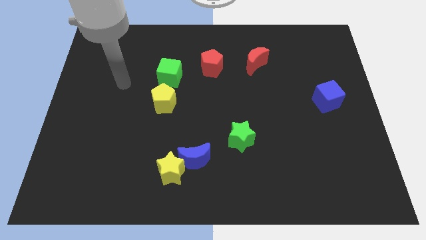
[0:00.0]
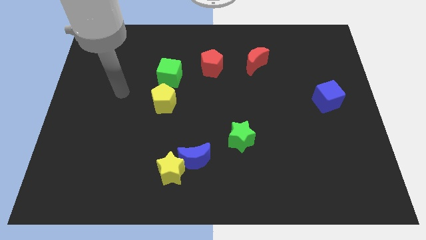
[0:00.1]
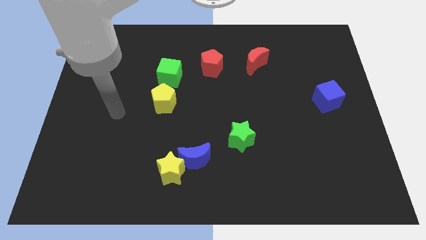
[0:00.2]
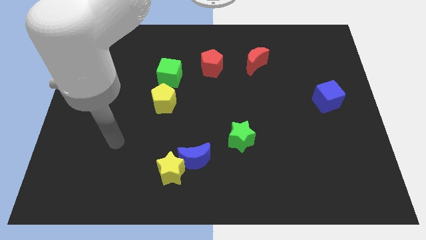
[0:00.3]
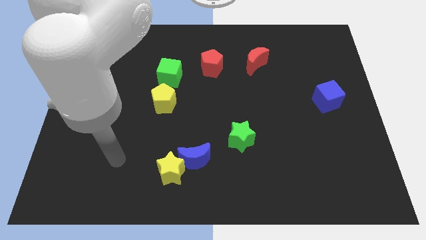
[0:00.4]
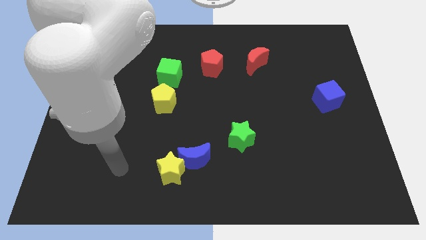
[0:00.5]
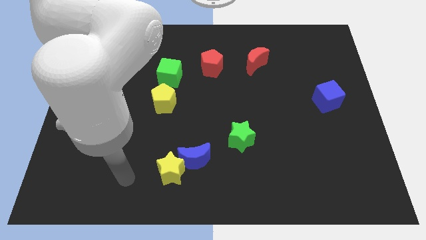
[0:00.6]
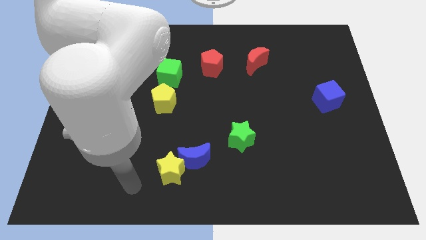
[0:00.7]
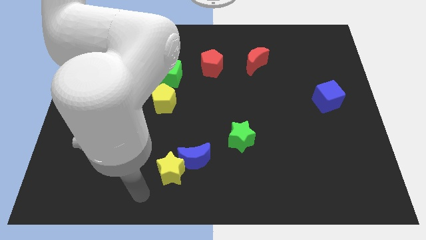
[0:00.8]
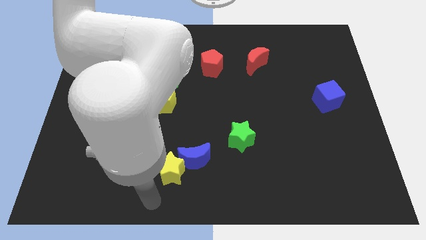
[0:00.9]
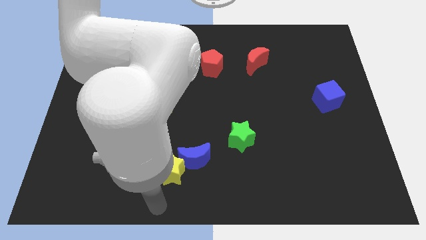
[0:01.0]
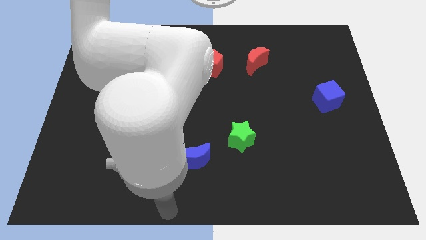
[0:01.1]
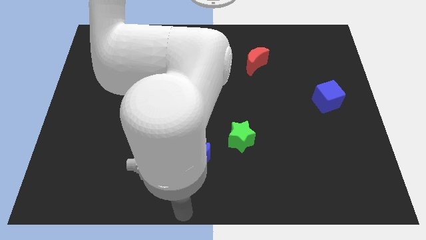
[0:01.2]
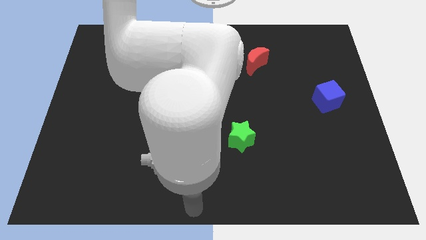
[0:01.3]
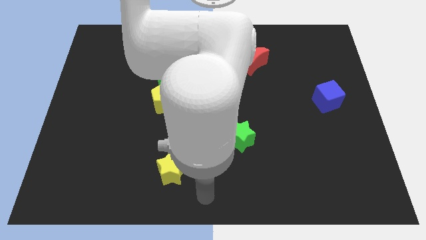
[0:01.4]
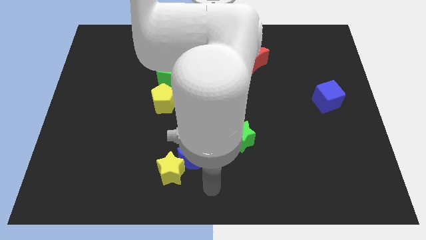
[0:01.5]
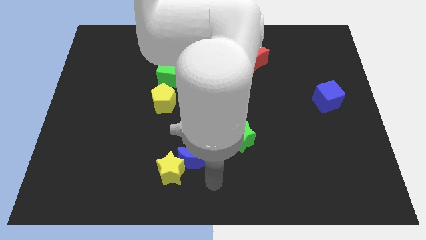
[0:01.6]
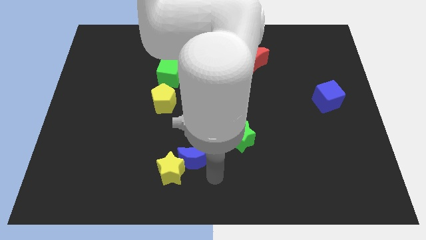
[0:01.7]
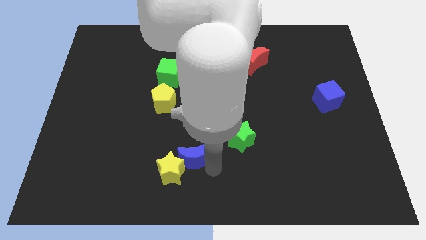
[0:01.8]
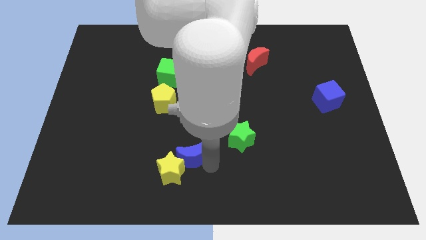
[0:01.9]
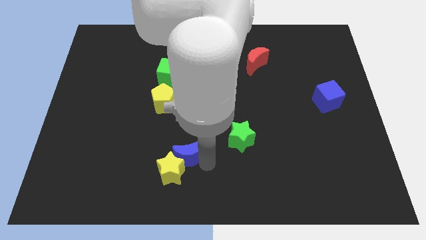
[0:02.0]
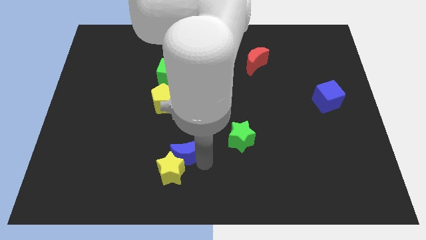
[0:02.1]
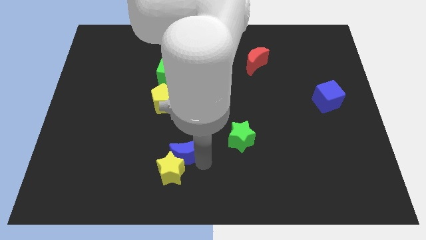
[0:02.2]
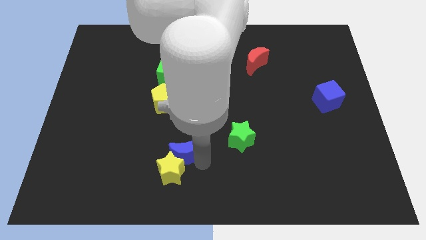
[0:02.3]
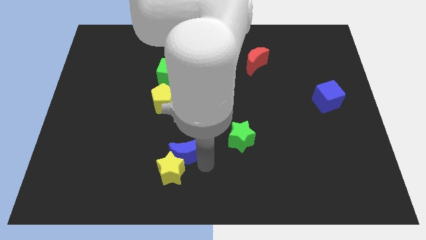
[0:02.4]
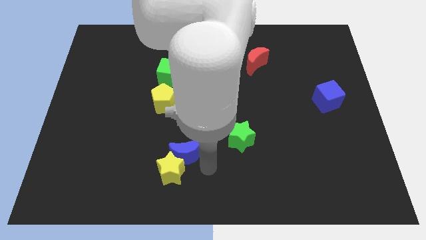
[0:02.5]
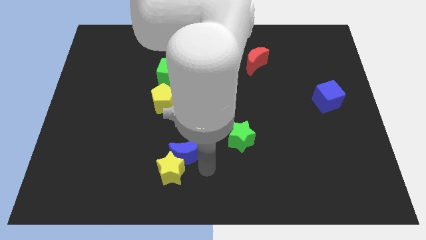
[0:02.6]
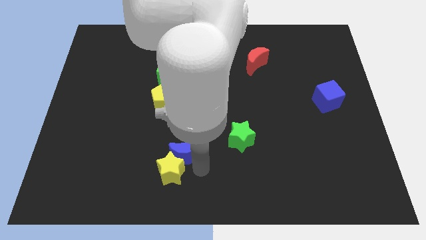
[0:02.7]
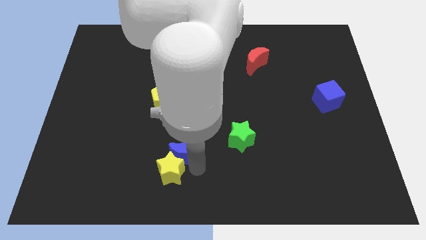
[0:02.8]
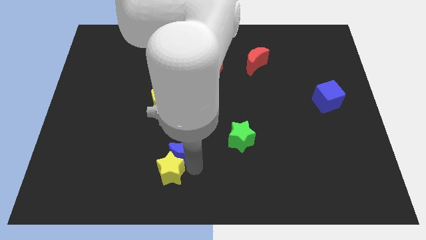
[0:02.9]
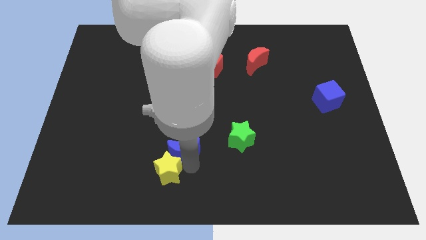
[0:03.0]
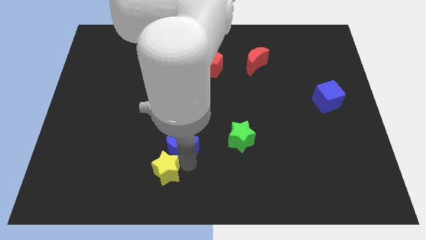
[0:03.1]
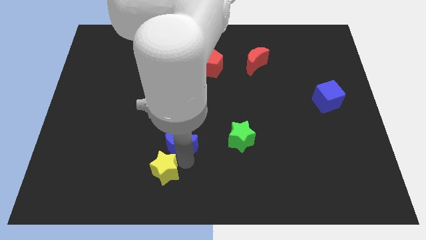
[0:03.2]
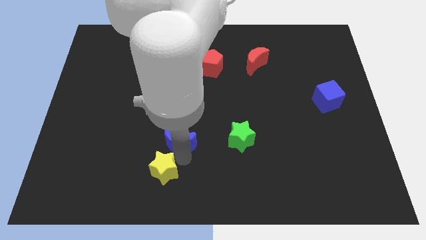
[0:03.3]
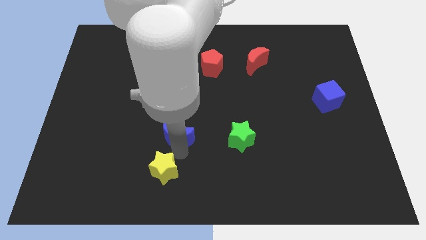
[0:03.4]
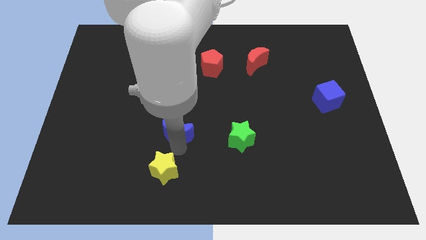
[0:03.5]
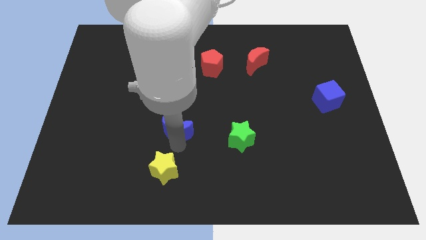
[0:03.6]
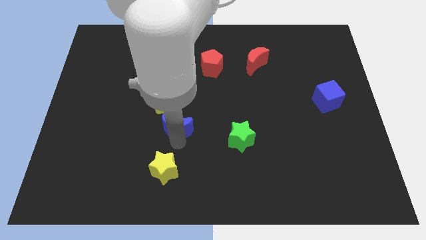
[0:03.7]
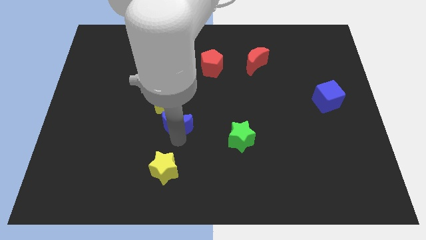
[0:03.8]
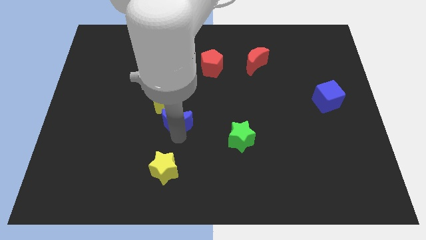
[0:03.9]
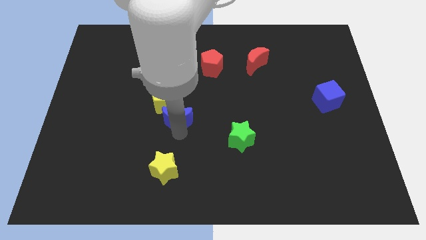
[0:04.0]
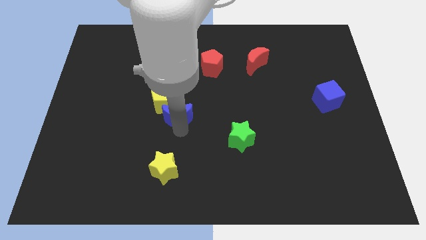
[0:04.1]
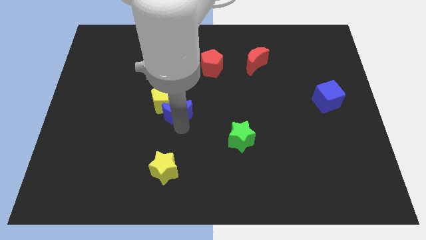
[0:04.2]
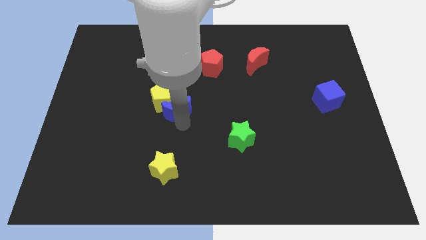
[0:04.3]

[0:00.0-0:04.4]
move the blue moon next to the yellow pentagon

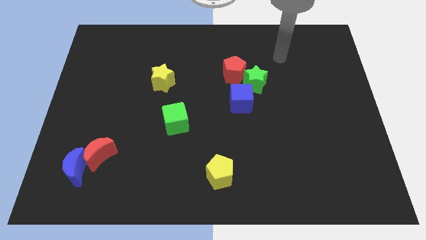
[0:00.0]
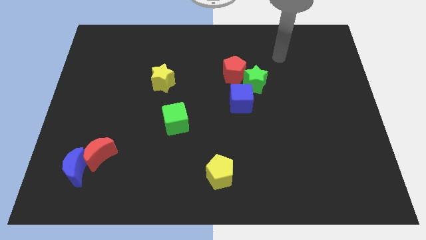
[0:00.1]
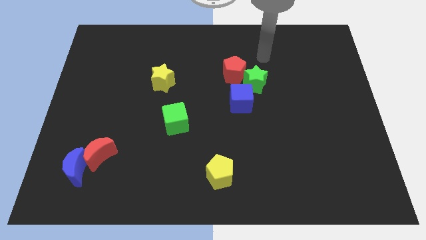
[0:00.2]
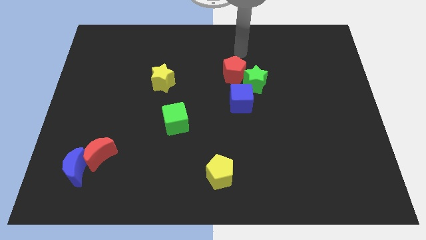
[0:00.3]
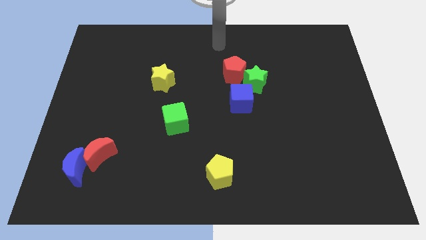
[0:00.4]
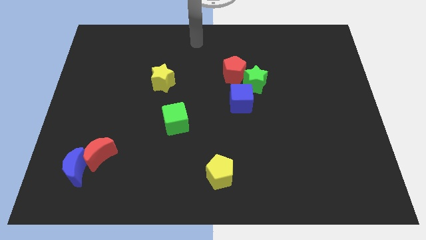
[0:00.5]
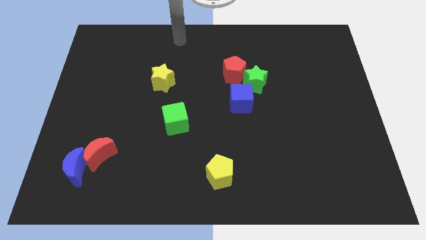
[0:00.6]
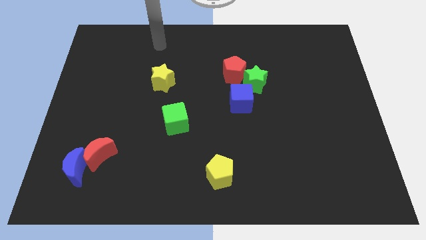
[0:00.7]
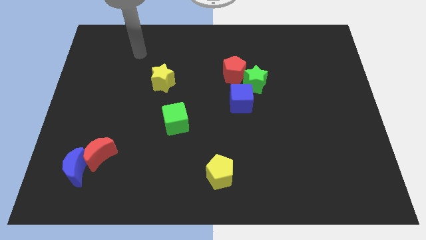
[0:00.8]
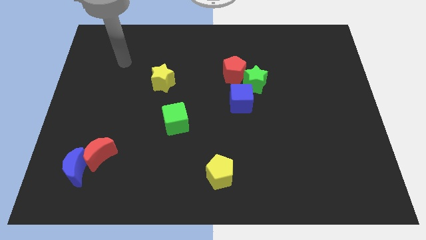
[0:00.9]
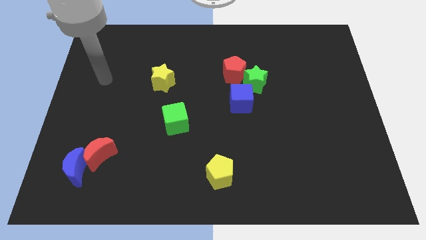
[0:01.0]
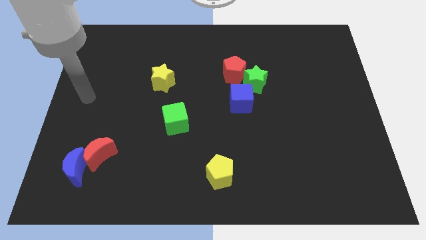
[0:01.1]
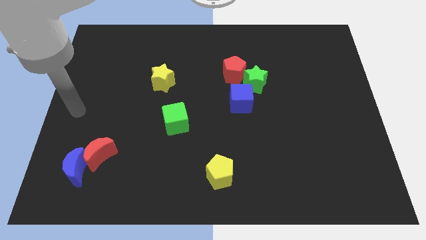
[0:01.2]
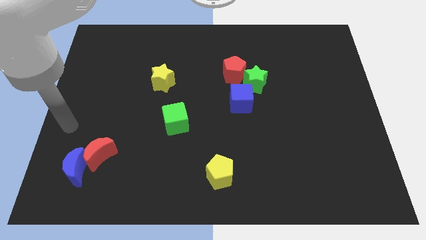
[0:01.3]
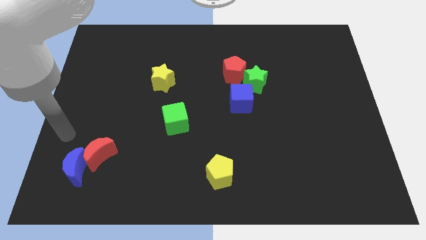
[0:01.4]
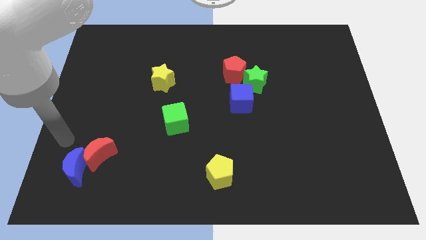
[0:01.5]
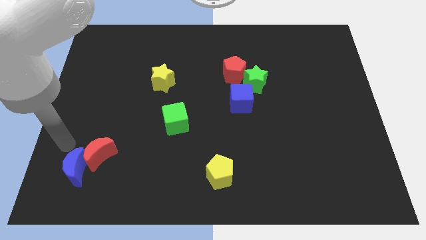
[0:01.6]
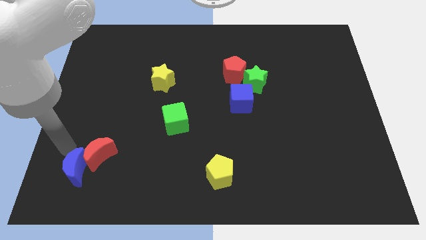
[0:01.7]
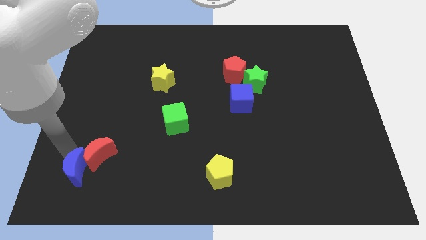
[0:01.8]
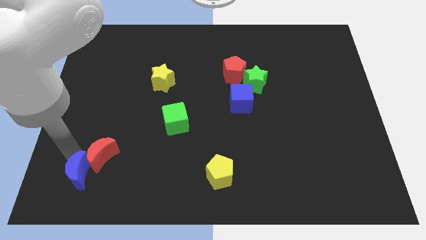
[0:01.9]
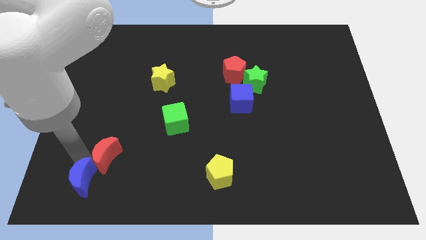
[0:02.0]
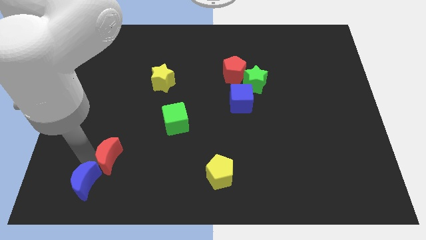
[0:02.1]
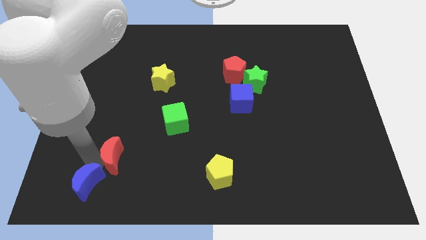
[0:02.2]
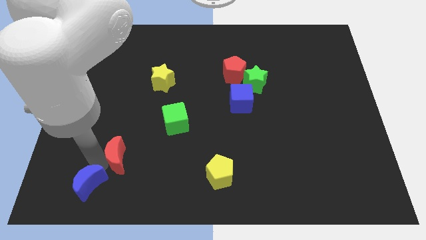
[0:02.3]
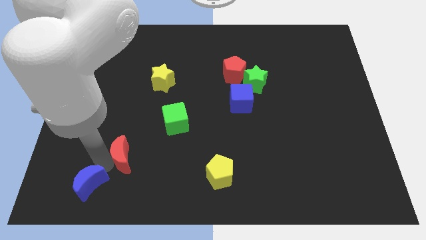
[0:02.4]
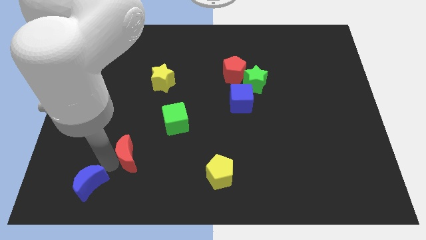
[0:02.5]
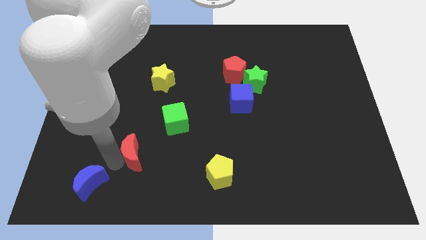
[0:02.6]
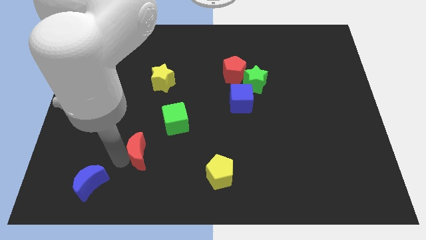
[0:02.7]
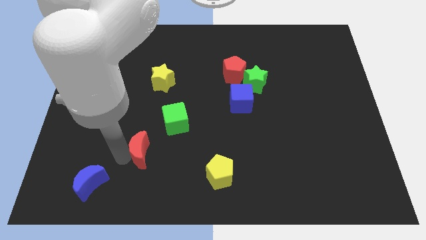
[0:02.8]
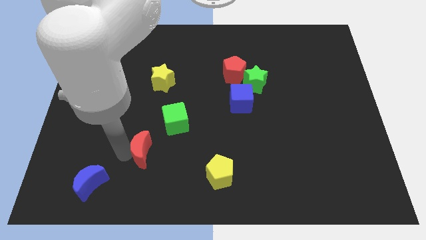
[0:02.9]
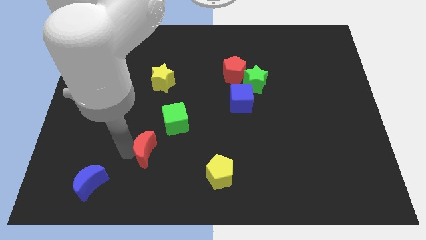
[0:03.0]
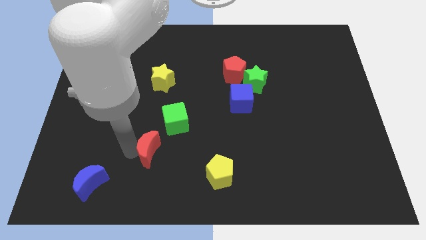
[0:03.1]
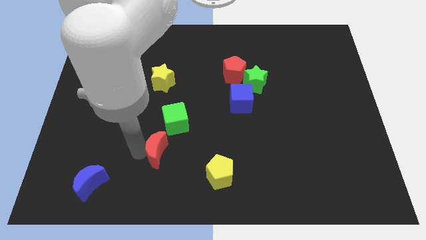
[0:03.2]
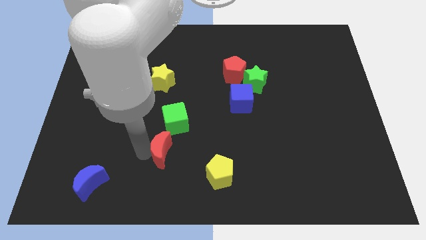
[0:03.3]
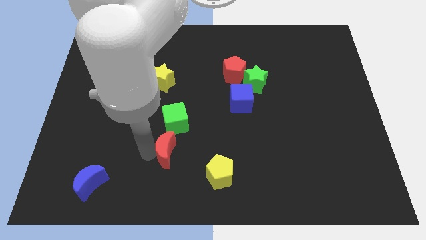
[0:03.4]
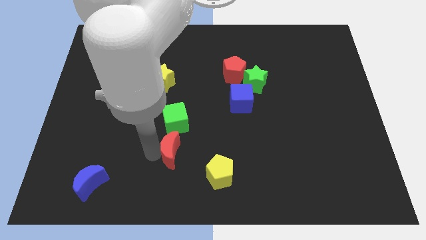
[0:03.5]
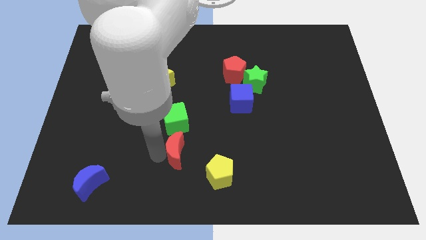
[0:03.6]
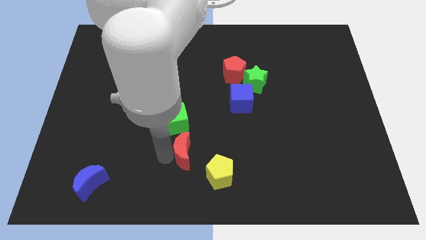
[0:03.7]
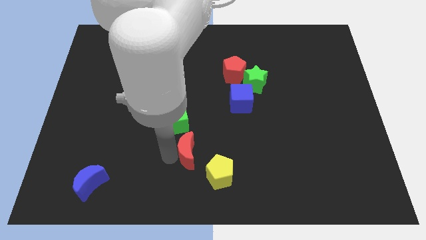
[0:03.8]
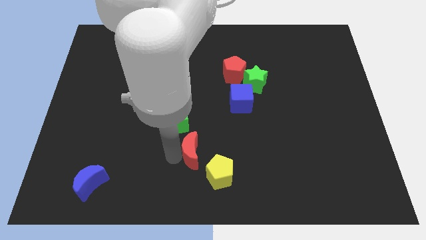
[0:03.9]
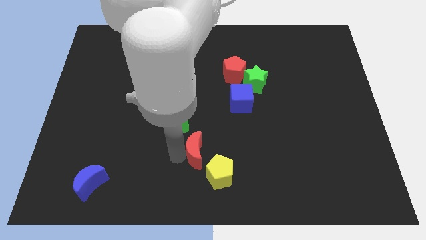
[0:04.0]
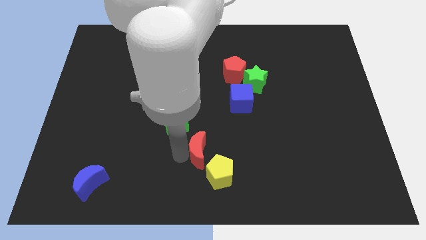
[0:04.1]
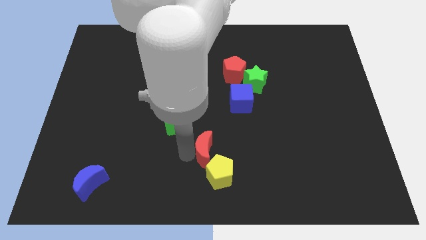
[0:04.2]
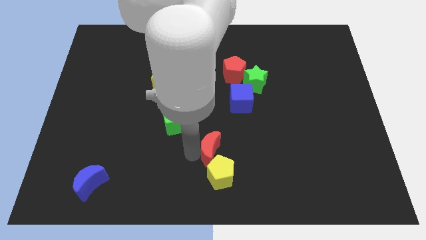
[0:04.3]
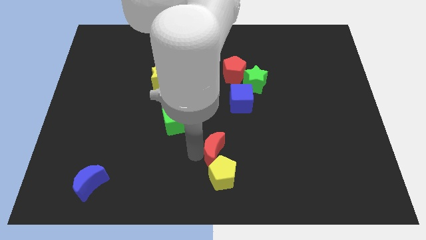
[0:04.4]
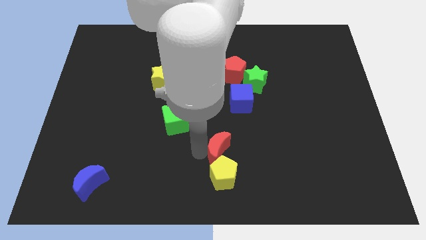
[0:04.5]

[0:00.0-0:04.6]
put the red moon close to the yellow pentagon
